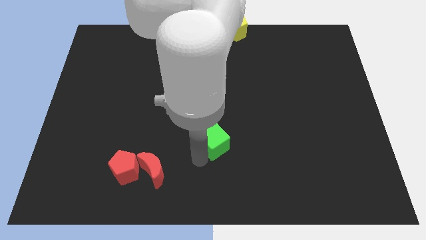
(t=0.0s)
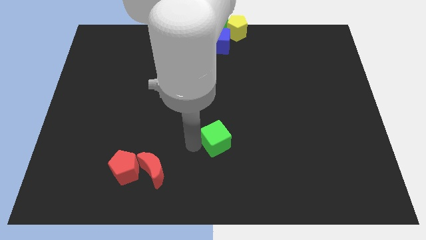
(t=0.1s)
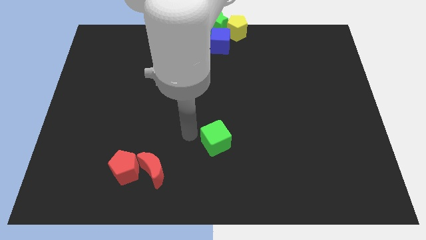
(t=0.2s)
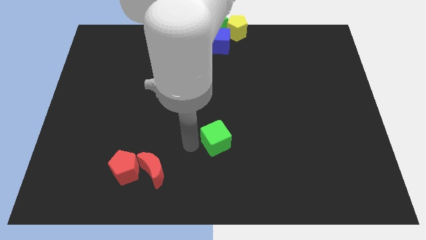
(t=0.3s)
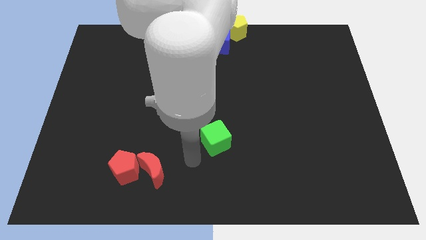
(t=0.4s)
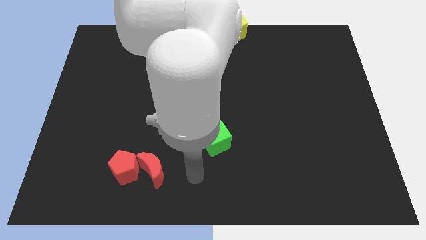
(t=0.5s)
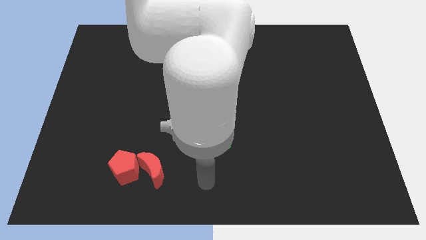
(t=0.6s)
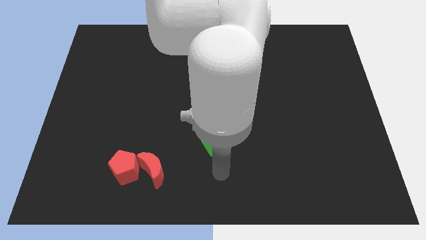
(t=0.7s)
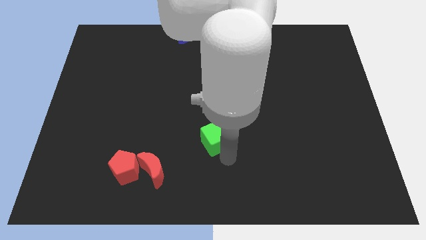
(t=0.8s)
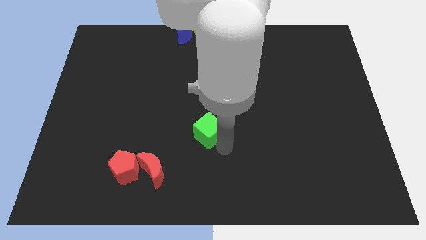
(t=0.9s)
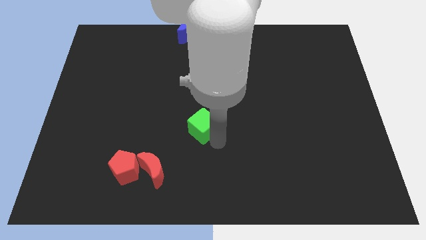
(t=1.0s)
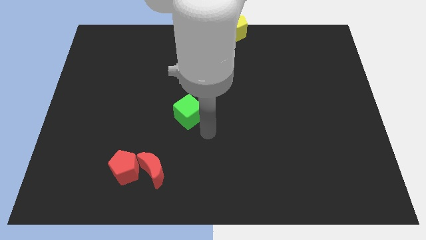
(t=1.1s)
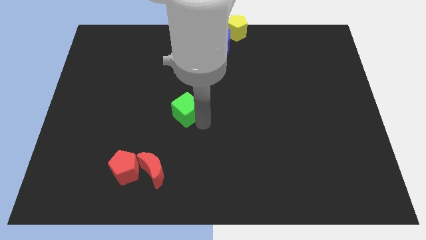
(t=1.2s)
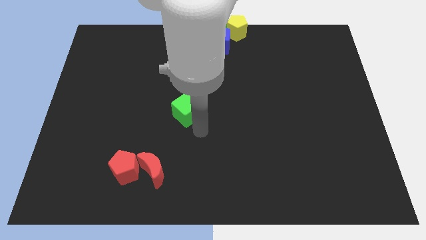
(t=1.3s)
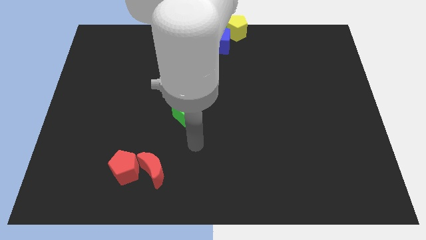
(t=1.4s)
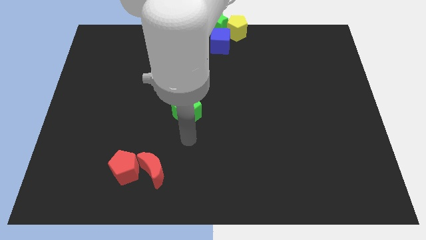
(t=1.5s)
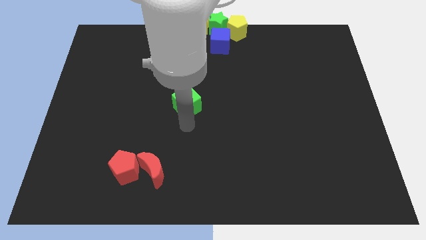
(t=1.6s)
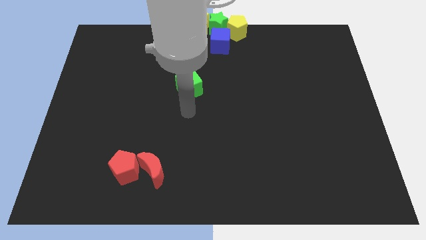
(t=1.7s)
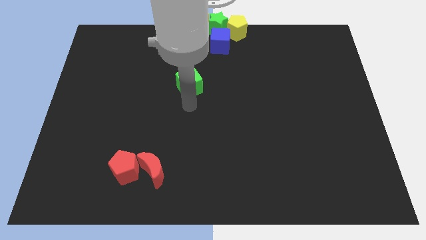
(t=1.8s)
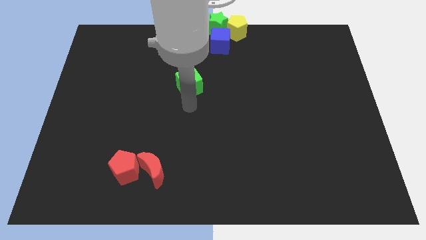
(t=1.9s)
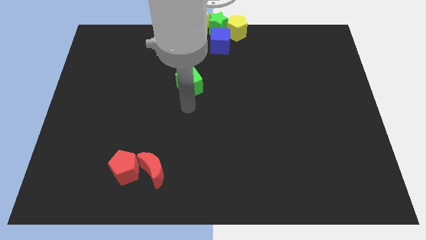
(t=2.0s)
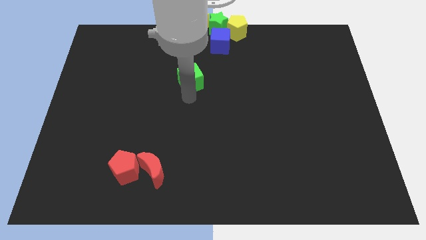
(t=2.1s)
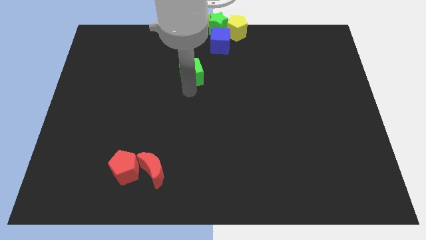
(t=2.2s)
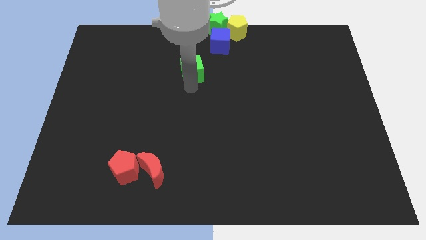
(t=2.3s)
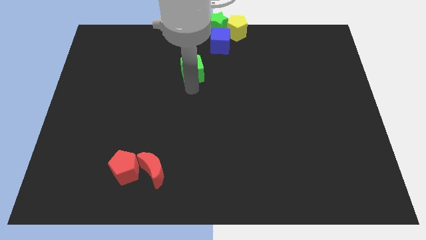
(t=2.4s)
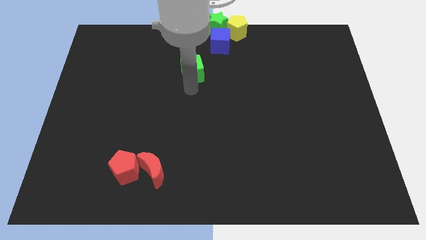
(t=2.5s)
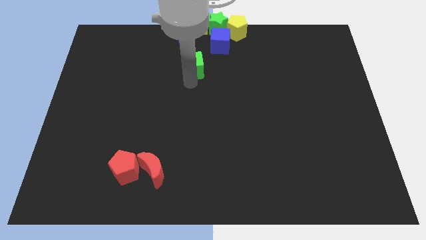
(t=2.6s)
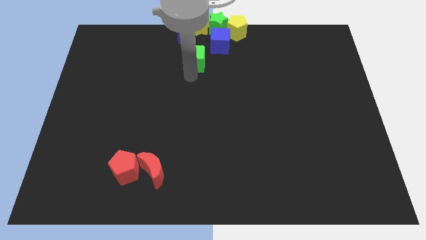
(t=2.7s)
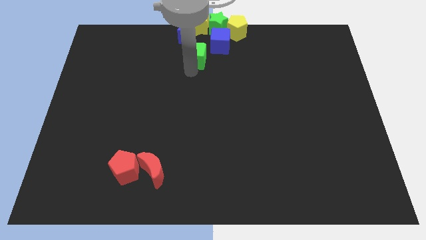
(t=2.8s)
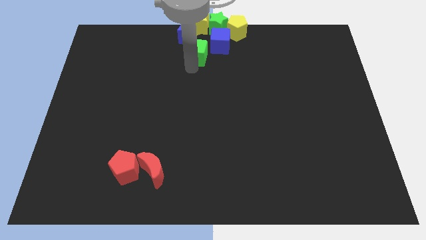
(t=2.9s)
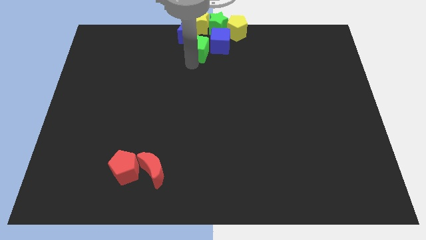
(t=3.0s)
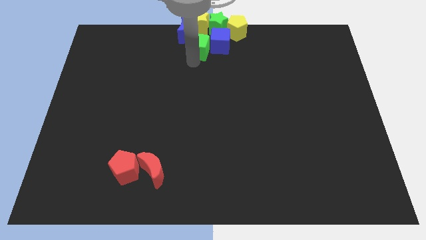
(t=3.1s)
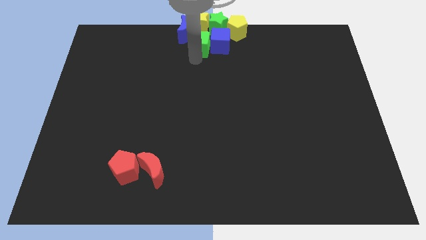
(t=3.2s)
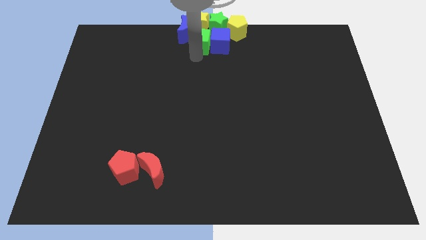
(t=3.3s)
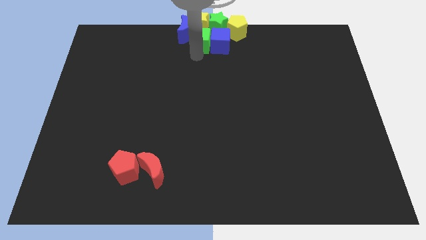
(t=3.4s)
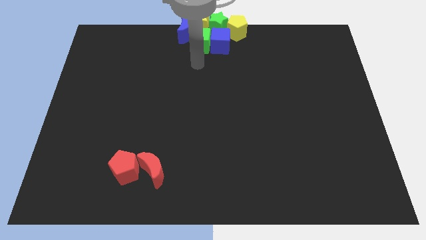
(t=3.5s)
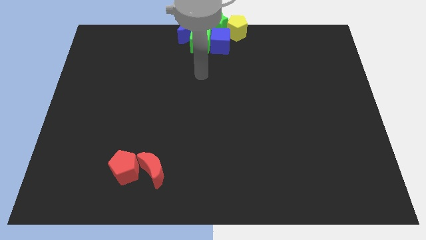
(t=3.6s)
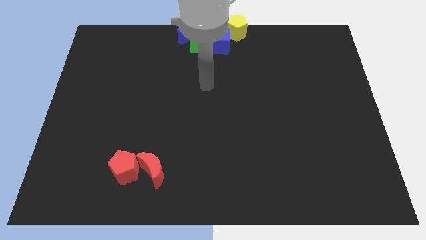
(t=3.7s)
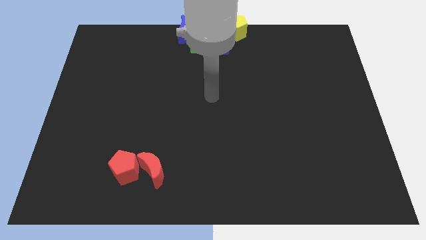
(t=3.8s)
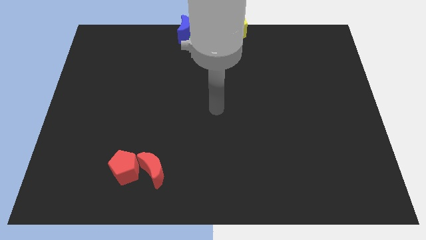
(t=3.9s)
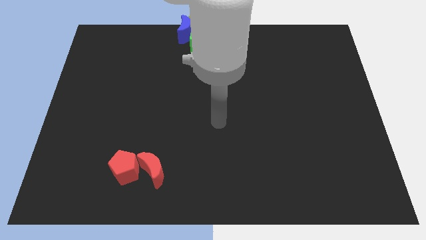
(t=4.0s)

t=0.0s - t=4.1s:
push the green cube to the left of the blue cube

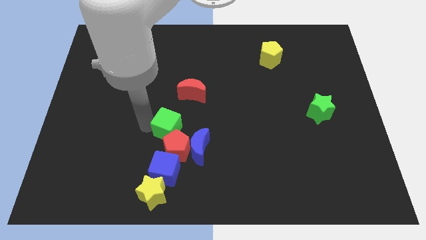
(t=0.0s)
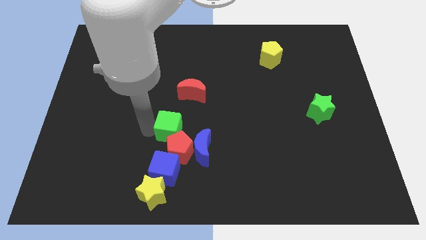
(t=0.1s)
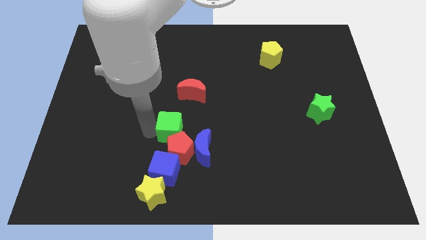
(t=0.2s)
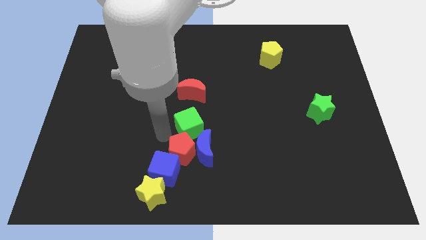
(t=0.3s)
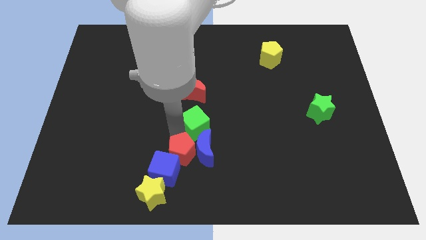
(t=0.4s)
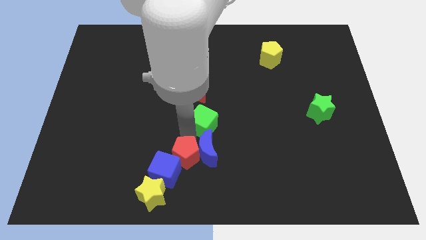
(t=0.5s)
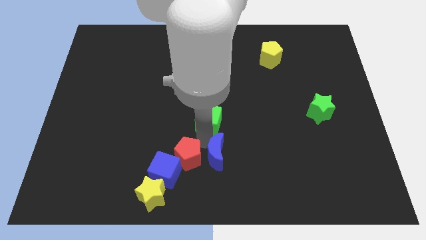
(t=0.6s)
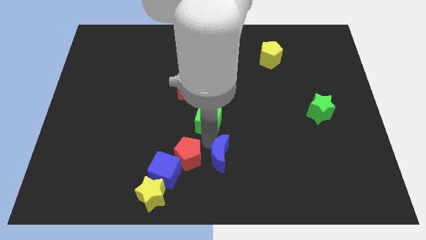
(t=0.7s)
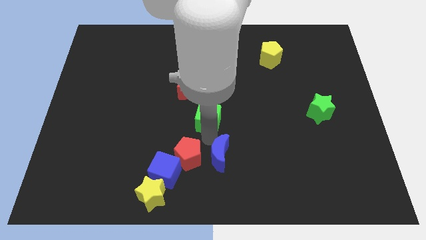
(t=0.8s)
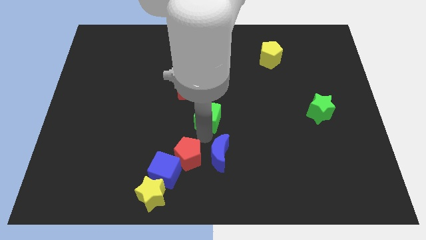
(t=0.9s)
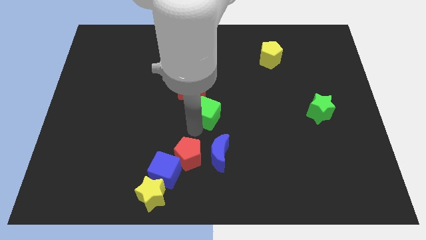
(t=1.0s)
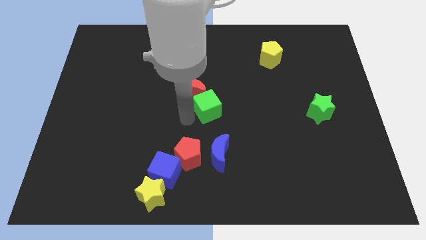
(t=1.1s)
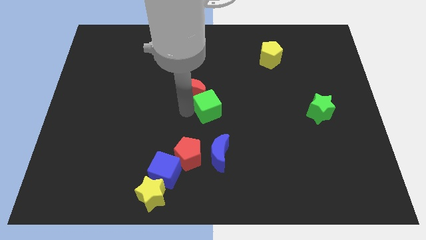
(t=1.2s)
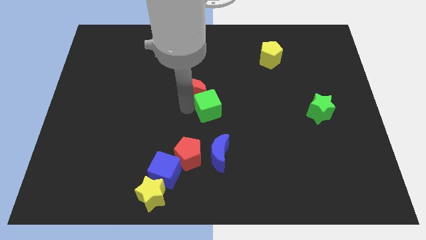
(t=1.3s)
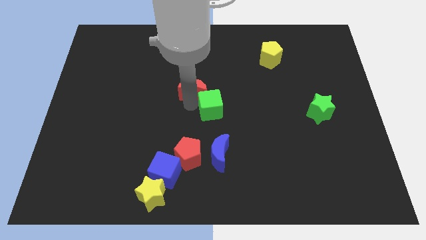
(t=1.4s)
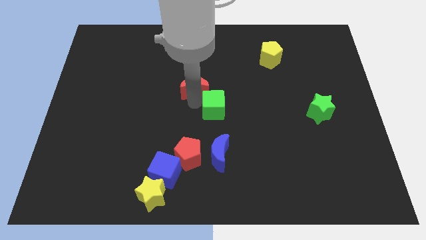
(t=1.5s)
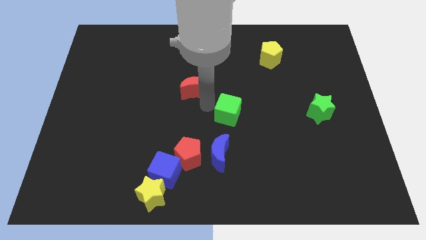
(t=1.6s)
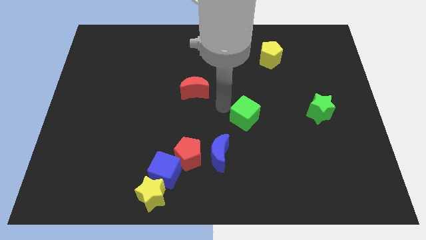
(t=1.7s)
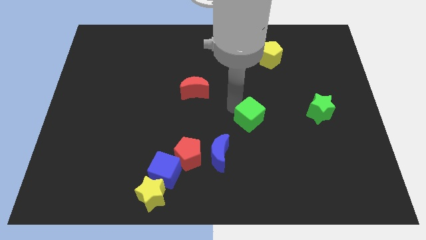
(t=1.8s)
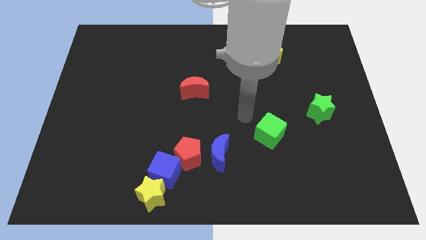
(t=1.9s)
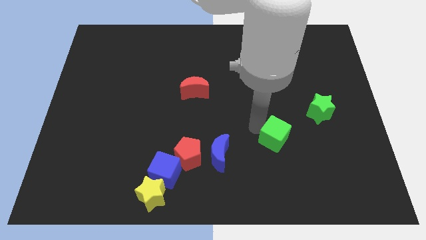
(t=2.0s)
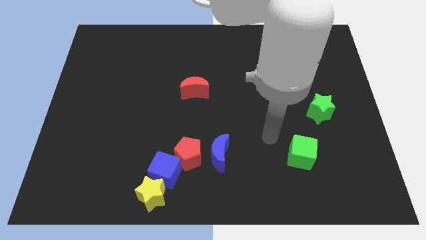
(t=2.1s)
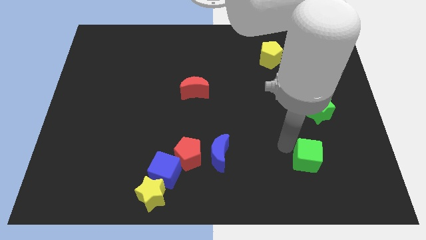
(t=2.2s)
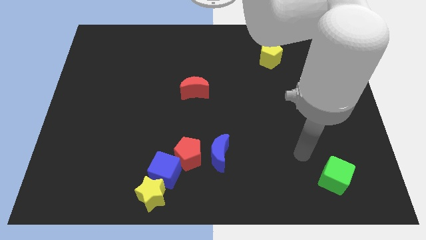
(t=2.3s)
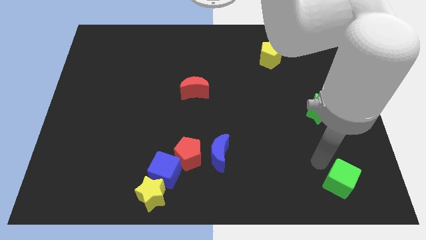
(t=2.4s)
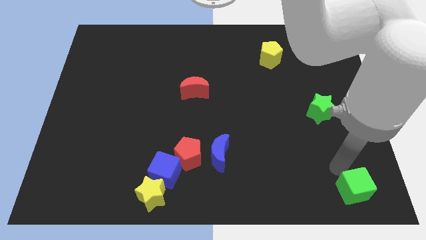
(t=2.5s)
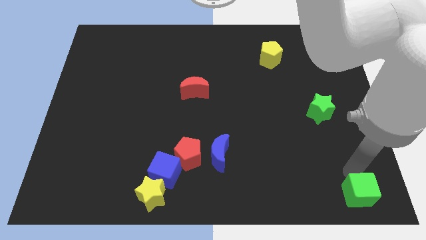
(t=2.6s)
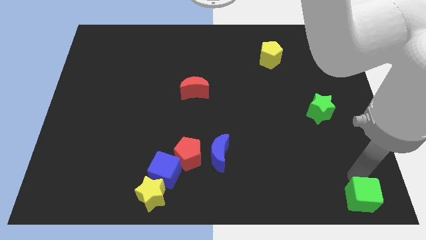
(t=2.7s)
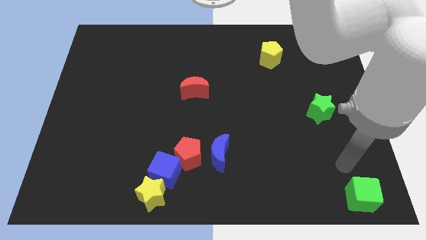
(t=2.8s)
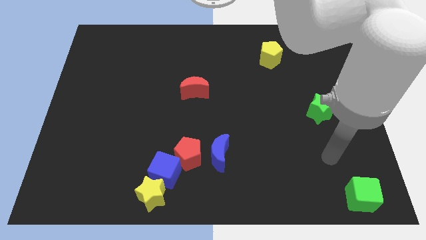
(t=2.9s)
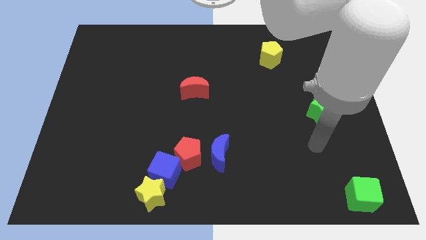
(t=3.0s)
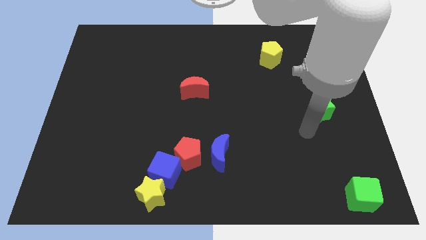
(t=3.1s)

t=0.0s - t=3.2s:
place the green cube below the green star

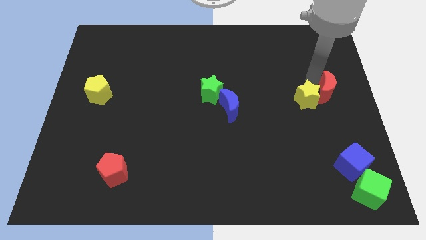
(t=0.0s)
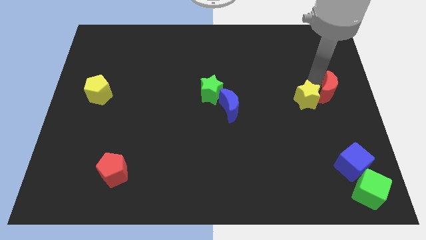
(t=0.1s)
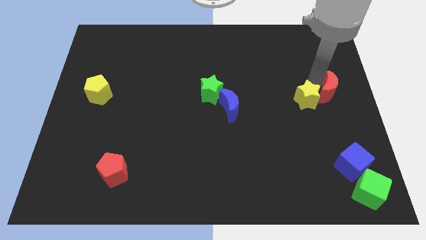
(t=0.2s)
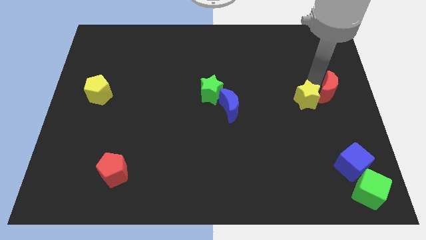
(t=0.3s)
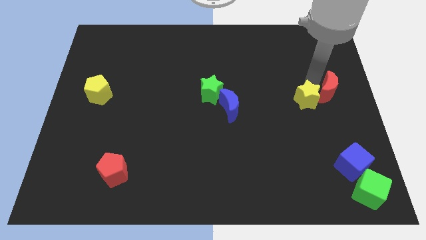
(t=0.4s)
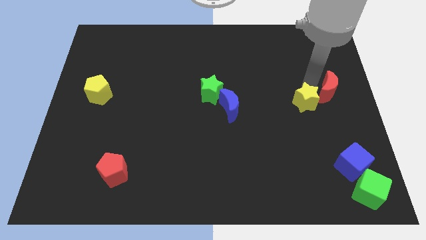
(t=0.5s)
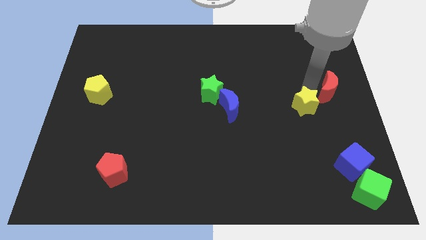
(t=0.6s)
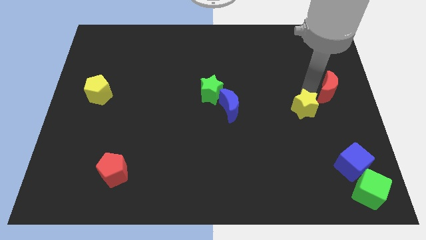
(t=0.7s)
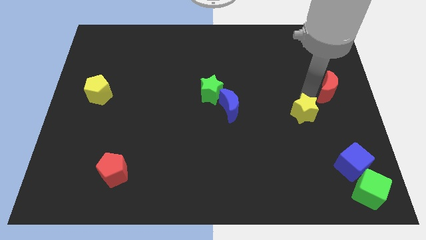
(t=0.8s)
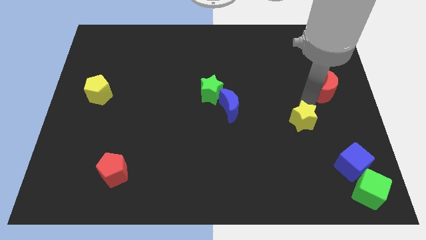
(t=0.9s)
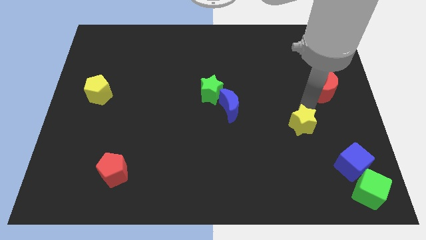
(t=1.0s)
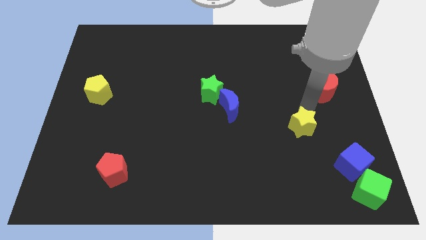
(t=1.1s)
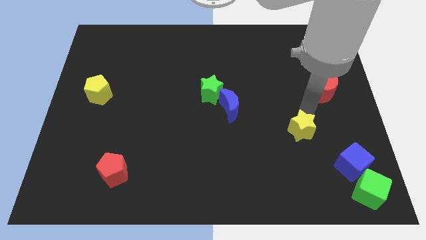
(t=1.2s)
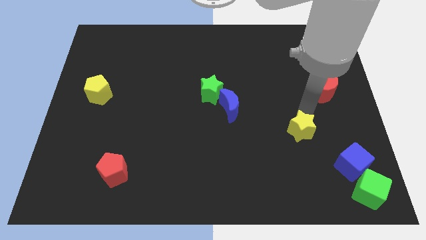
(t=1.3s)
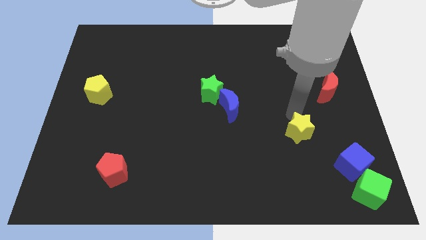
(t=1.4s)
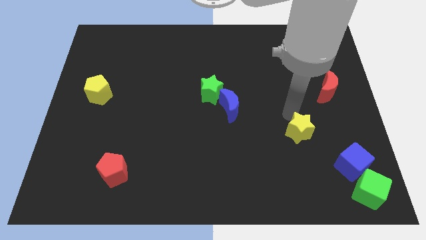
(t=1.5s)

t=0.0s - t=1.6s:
separate the yellow star from the red crescent
